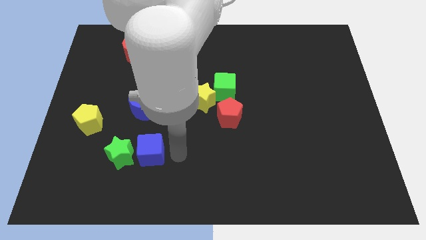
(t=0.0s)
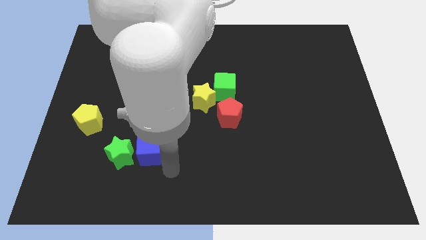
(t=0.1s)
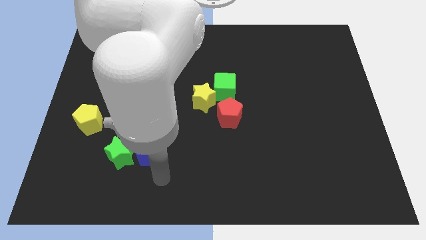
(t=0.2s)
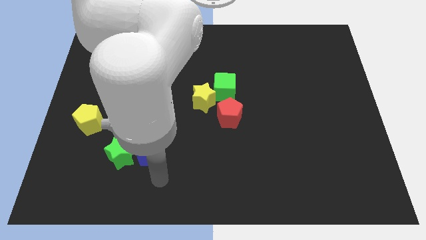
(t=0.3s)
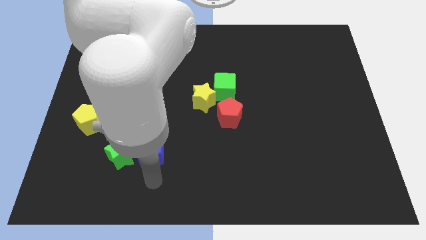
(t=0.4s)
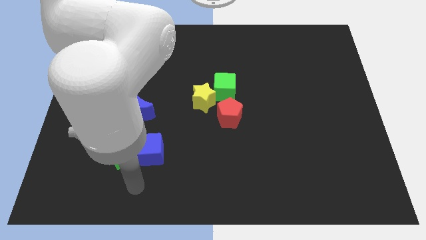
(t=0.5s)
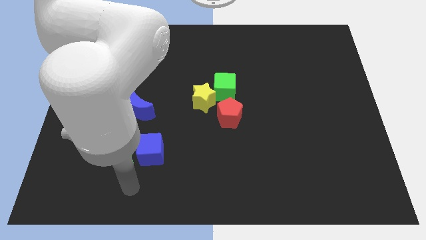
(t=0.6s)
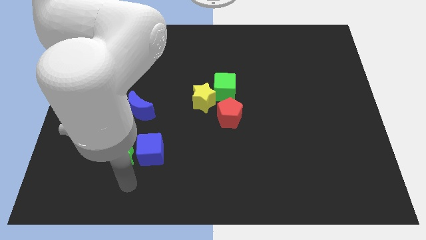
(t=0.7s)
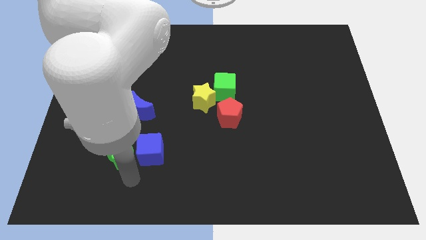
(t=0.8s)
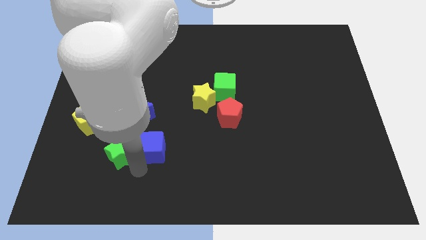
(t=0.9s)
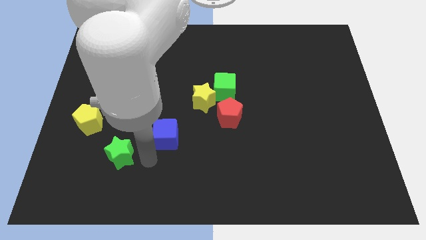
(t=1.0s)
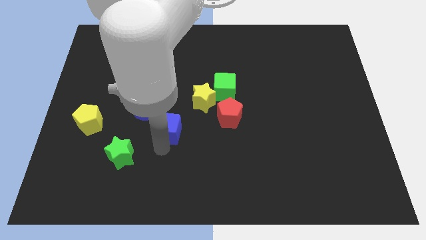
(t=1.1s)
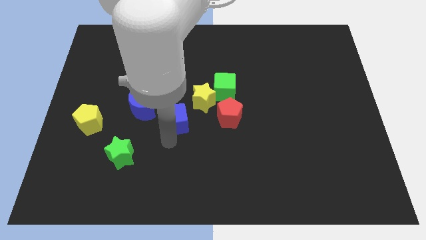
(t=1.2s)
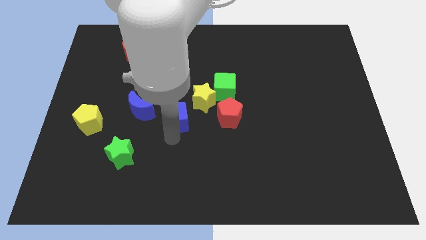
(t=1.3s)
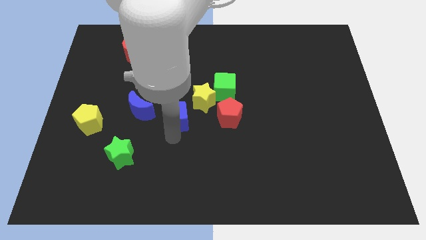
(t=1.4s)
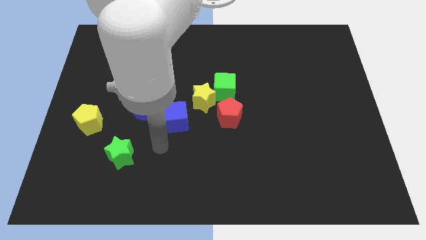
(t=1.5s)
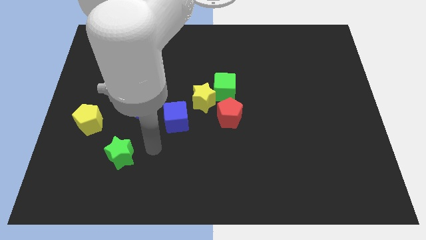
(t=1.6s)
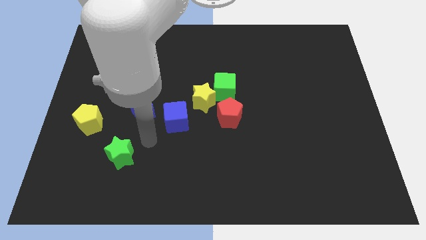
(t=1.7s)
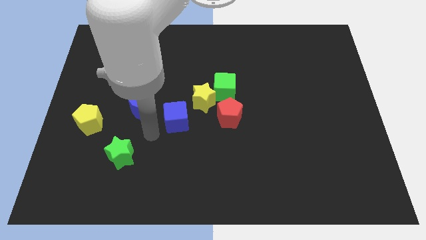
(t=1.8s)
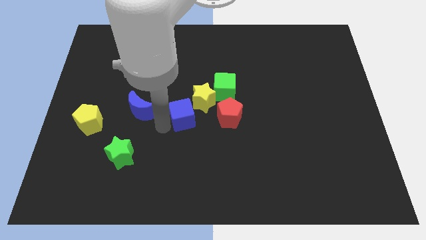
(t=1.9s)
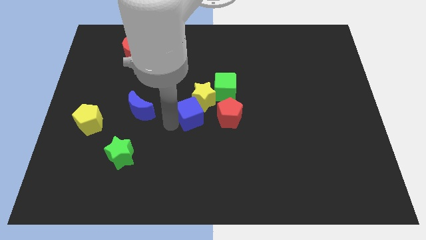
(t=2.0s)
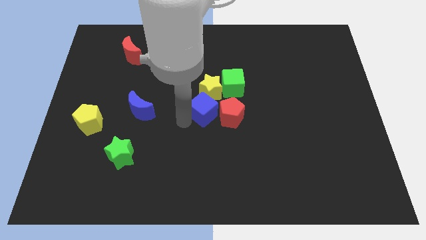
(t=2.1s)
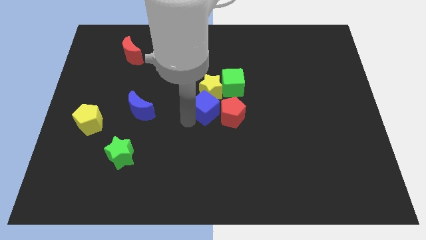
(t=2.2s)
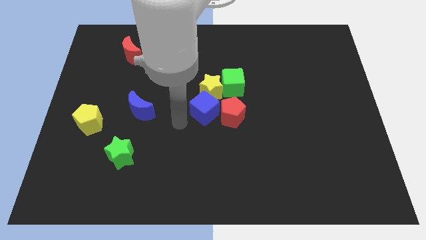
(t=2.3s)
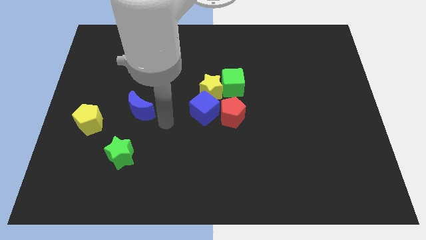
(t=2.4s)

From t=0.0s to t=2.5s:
move the blue cube into the group of blocks

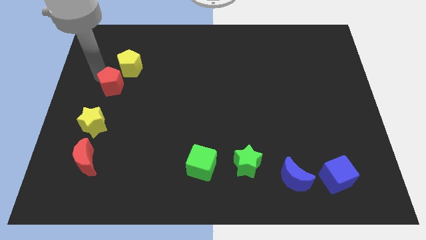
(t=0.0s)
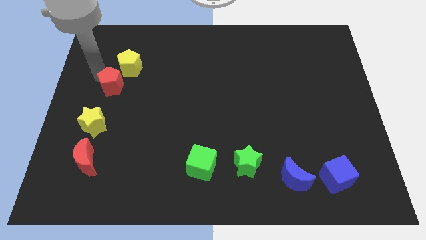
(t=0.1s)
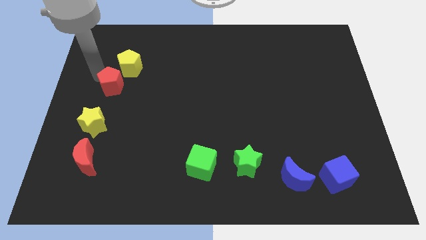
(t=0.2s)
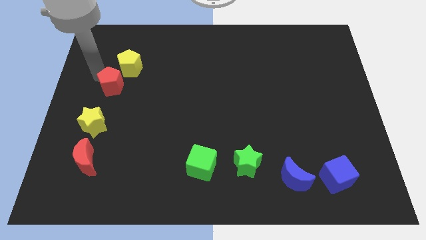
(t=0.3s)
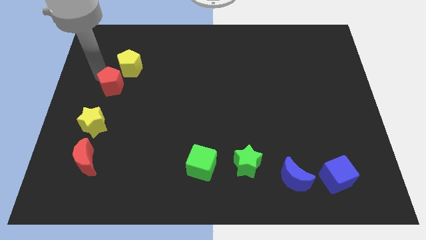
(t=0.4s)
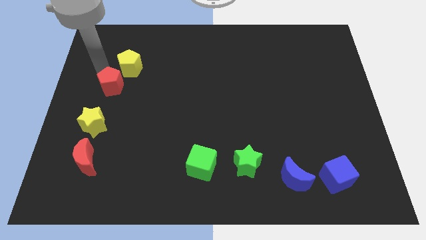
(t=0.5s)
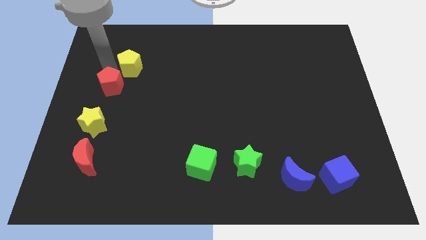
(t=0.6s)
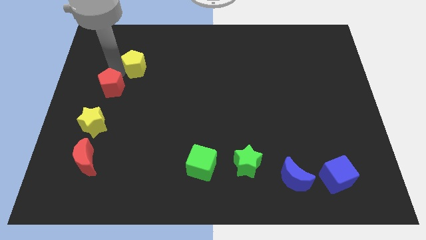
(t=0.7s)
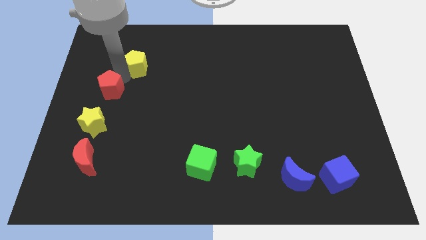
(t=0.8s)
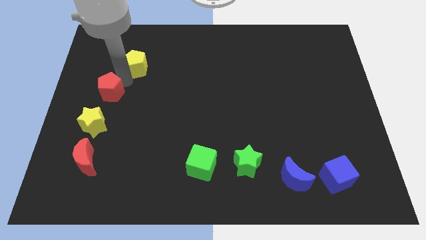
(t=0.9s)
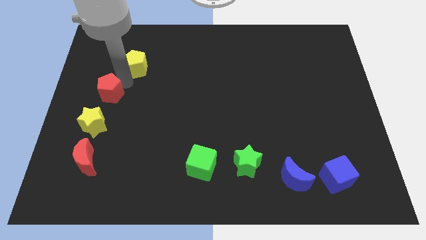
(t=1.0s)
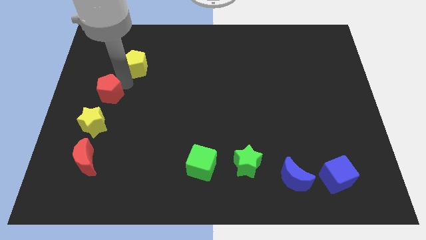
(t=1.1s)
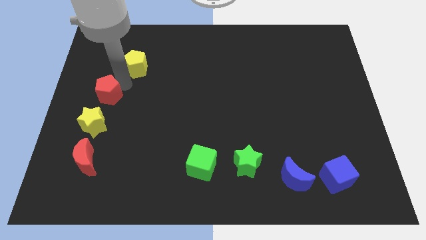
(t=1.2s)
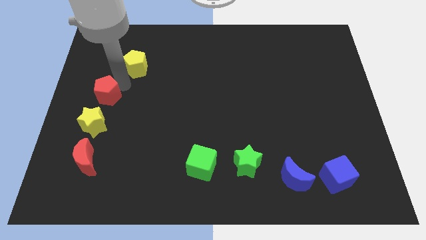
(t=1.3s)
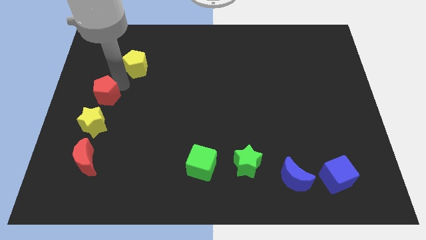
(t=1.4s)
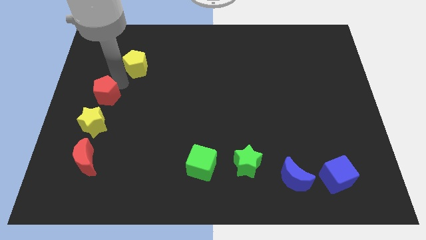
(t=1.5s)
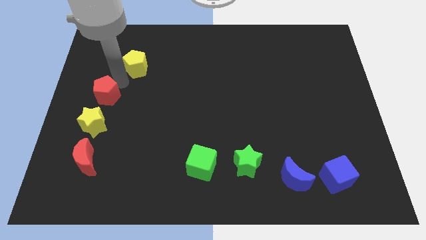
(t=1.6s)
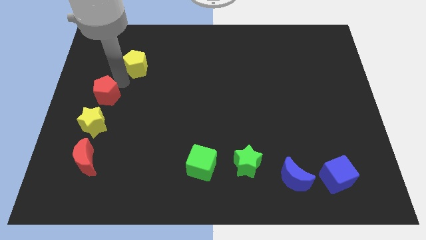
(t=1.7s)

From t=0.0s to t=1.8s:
move the red pentagon to the top of the yellow star

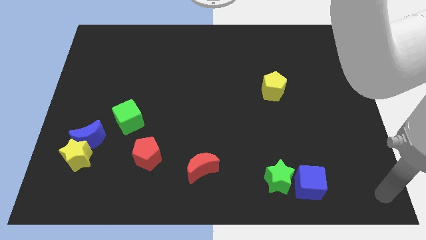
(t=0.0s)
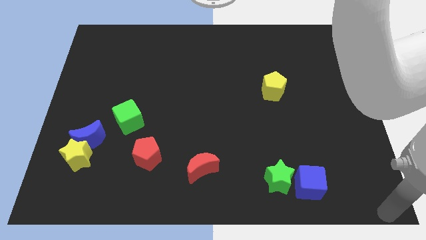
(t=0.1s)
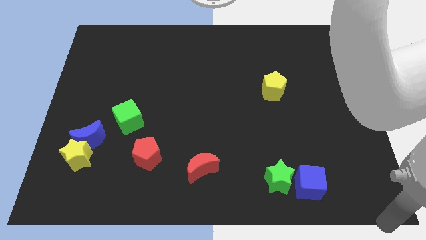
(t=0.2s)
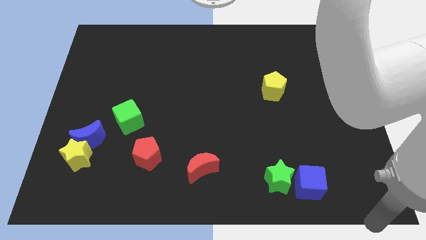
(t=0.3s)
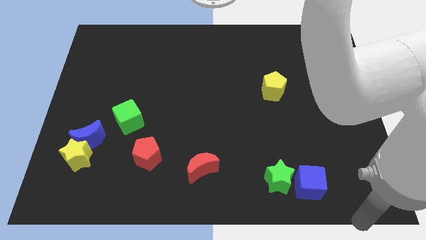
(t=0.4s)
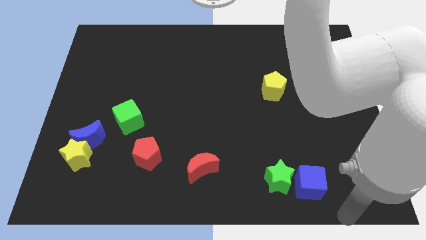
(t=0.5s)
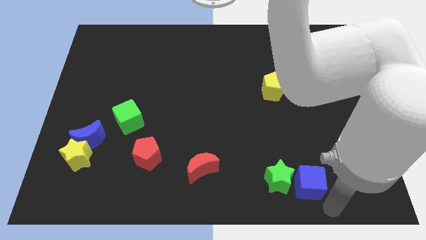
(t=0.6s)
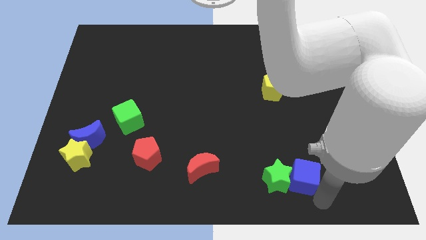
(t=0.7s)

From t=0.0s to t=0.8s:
place arm at the bottom of blue cube

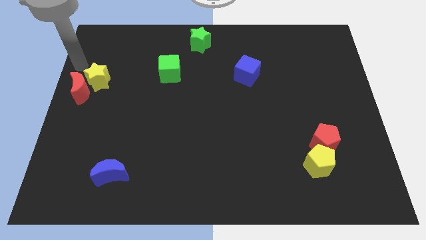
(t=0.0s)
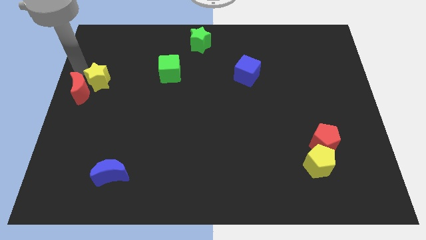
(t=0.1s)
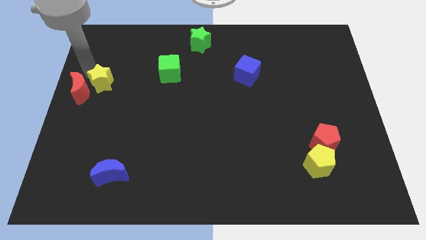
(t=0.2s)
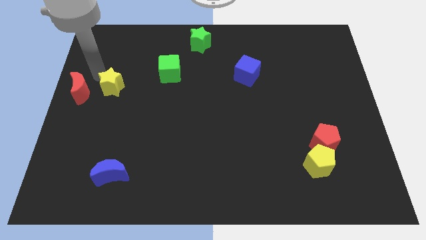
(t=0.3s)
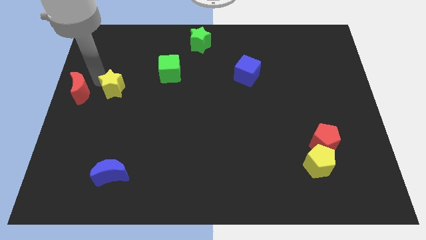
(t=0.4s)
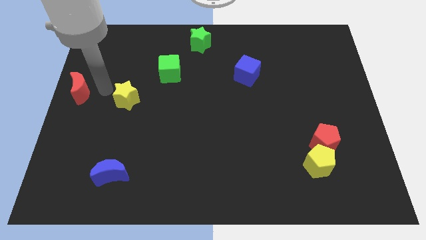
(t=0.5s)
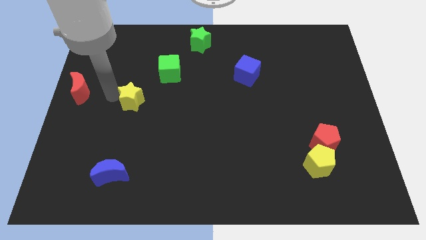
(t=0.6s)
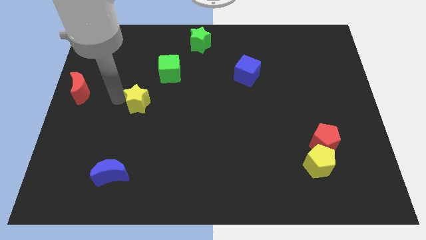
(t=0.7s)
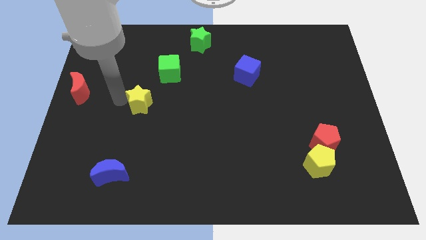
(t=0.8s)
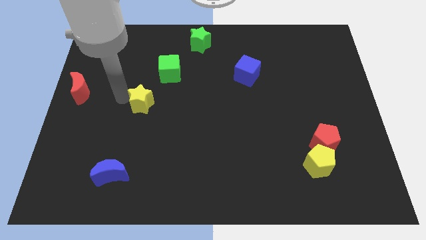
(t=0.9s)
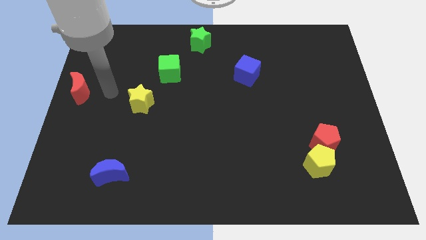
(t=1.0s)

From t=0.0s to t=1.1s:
place yellow star parallel to the green cube

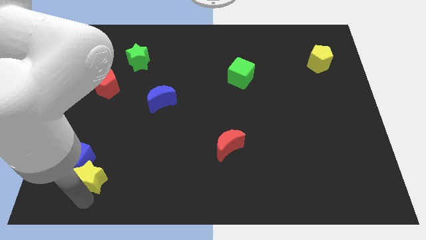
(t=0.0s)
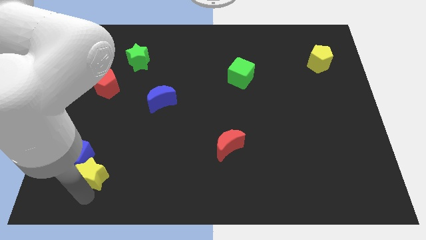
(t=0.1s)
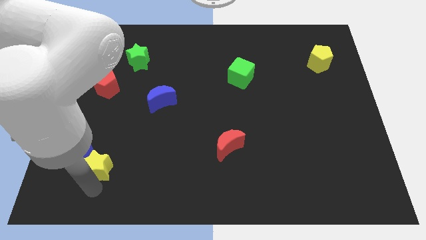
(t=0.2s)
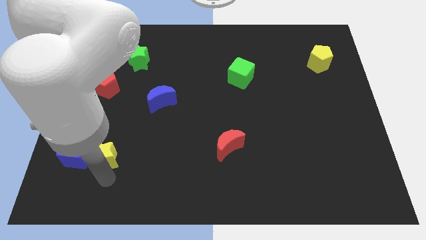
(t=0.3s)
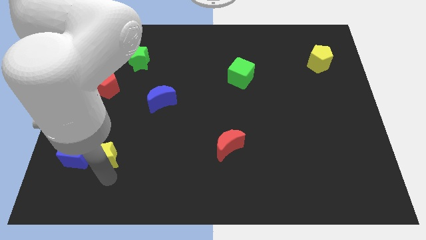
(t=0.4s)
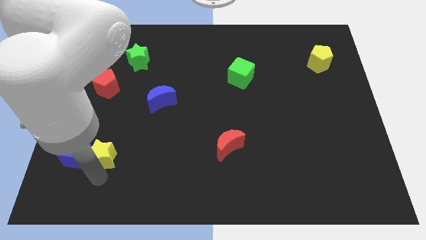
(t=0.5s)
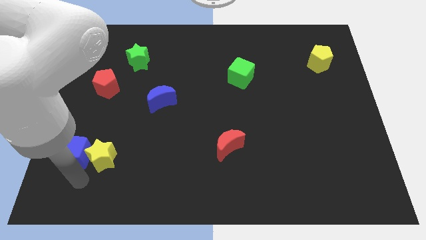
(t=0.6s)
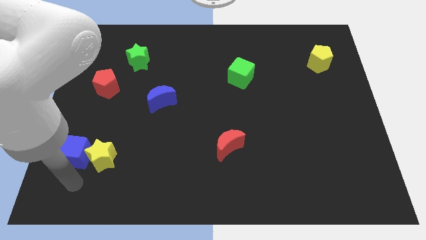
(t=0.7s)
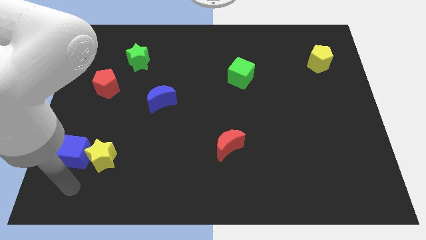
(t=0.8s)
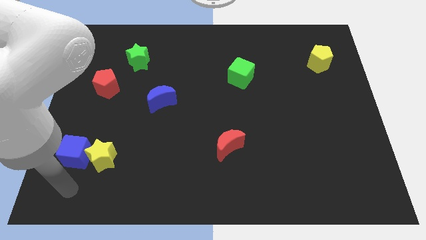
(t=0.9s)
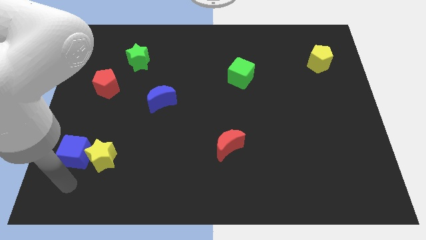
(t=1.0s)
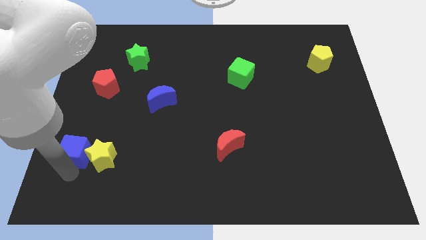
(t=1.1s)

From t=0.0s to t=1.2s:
move yellow star parallel right to blue cube

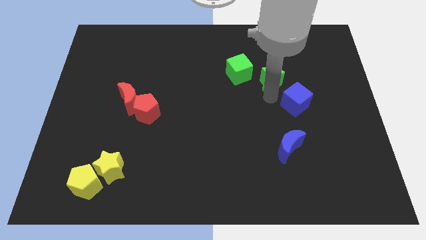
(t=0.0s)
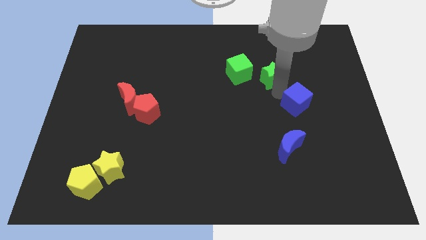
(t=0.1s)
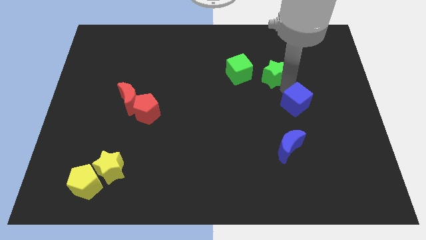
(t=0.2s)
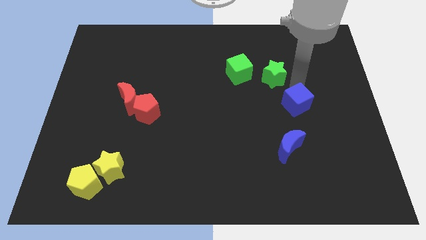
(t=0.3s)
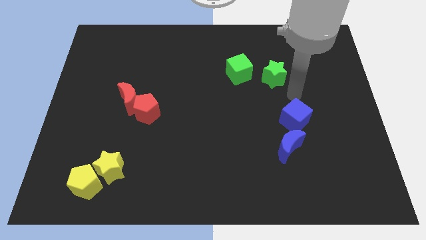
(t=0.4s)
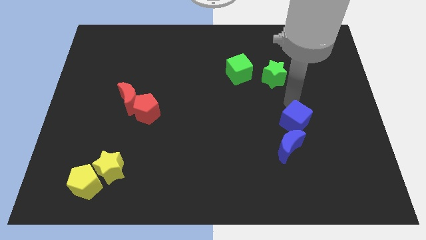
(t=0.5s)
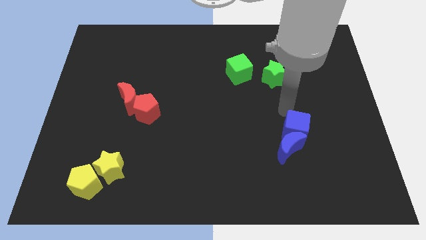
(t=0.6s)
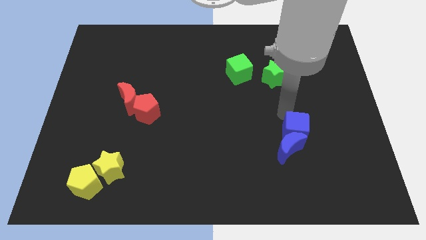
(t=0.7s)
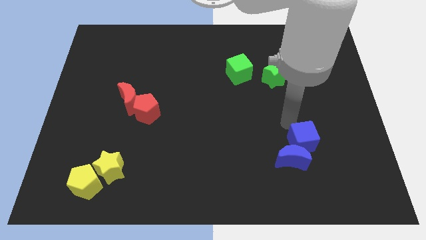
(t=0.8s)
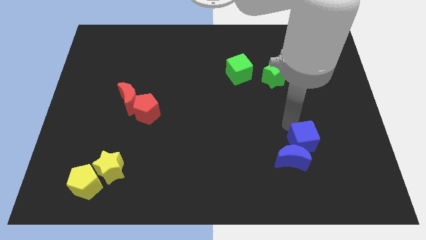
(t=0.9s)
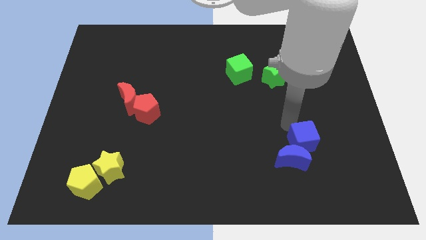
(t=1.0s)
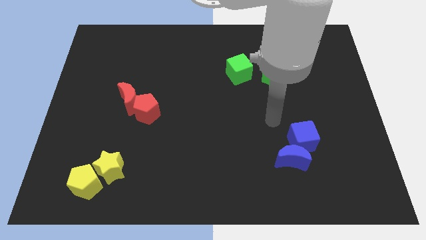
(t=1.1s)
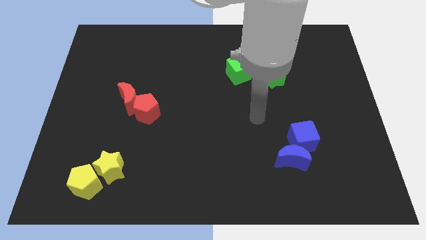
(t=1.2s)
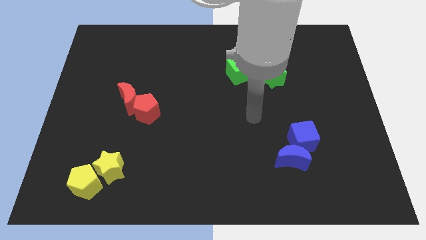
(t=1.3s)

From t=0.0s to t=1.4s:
push blue cube towards blue half moon

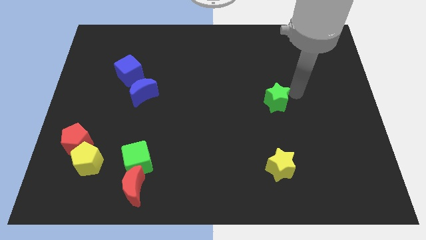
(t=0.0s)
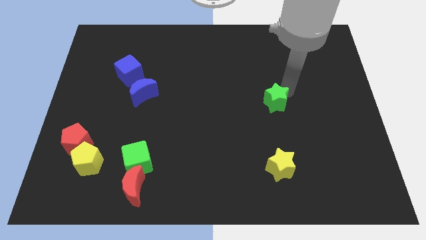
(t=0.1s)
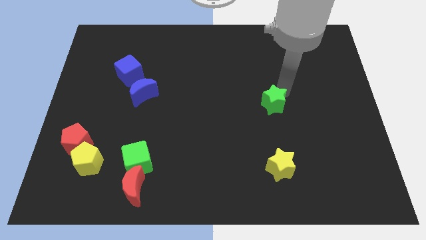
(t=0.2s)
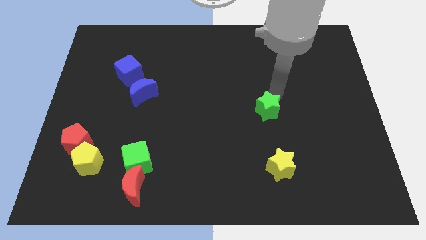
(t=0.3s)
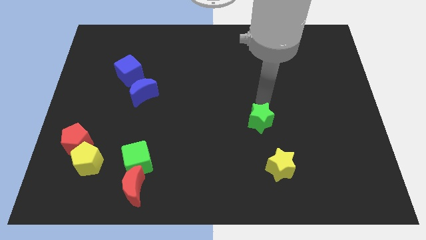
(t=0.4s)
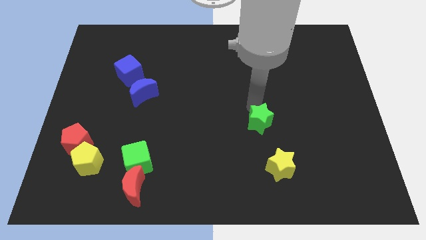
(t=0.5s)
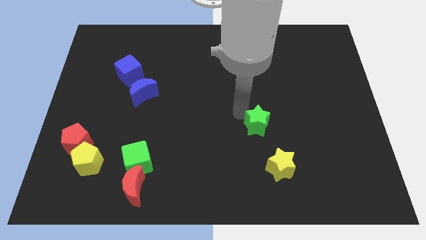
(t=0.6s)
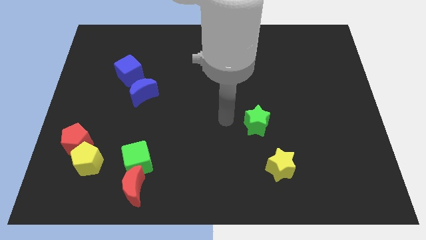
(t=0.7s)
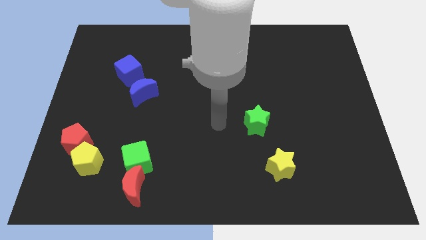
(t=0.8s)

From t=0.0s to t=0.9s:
push green star towards yellow star
